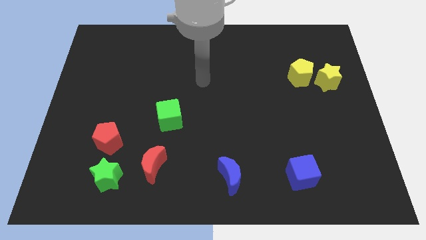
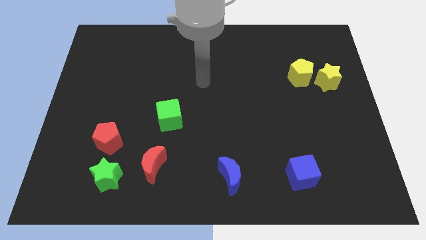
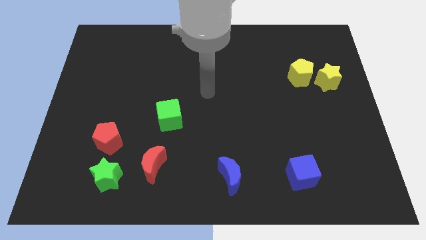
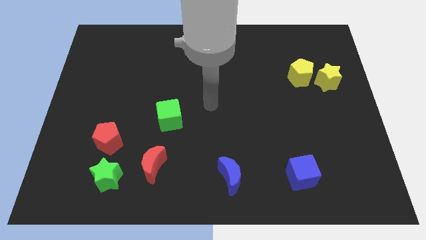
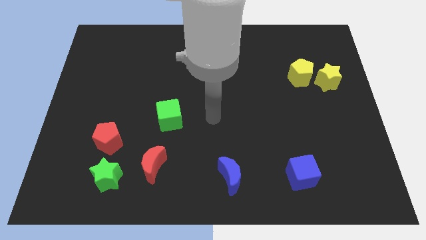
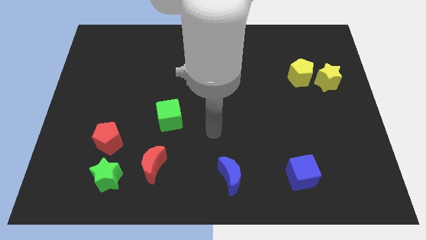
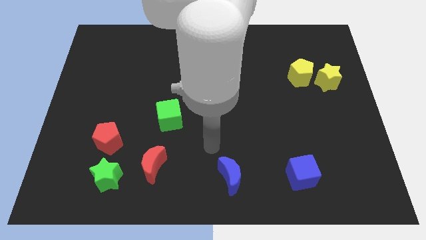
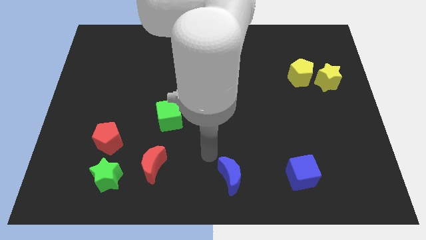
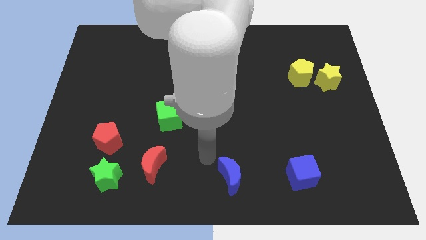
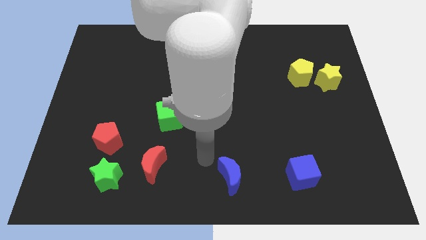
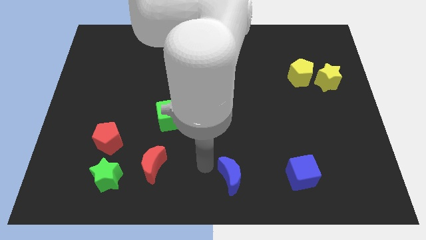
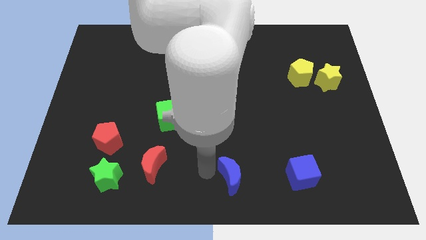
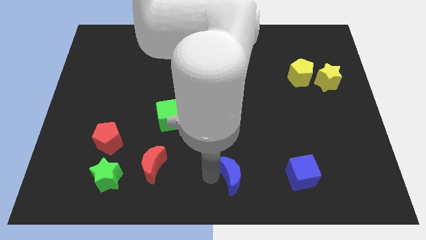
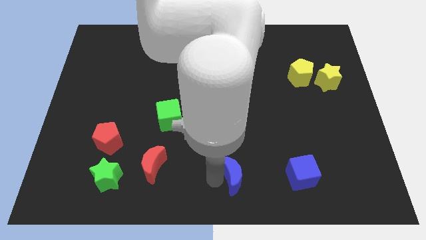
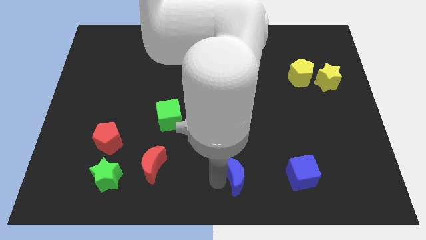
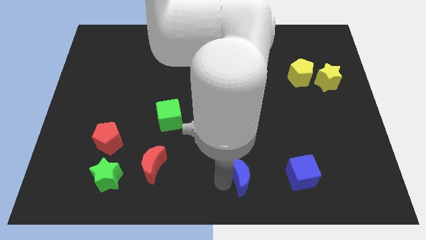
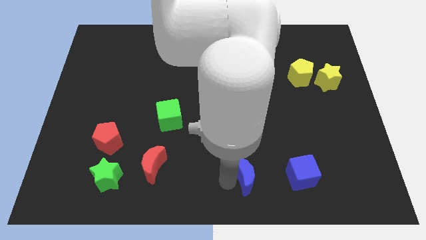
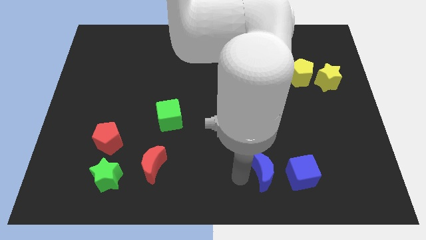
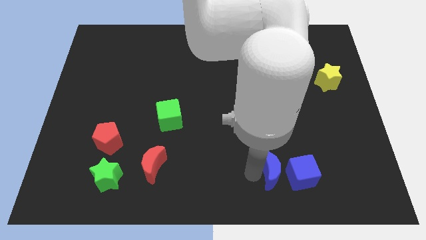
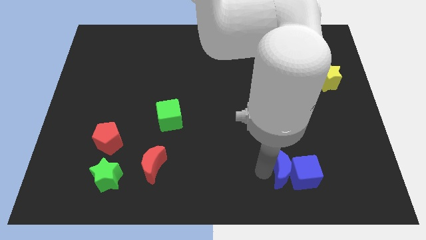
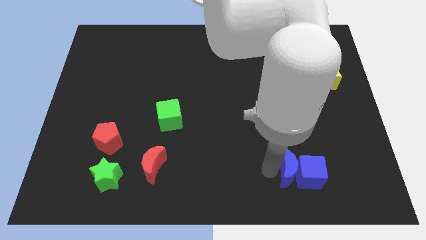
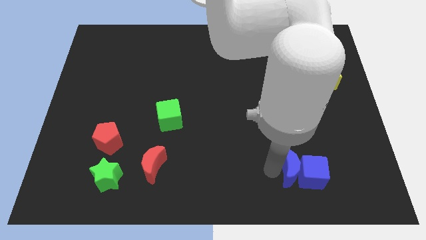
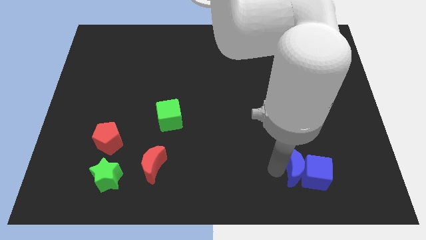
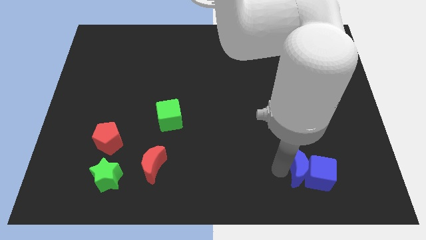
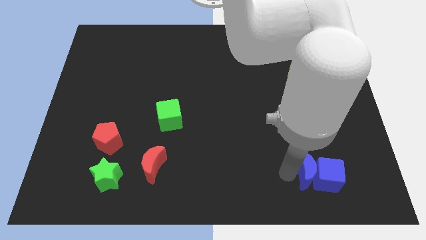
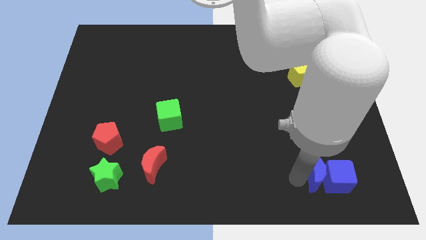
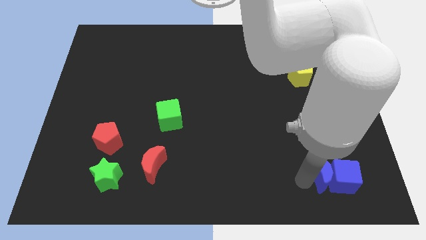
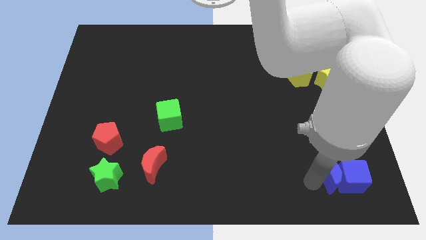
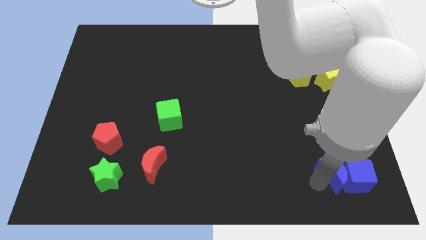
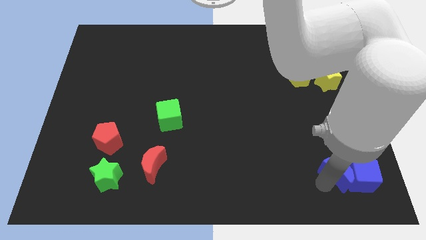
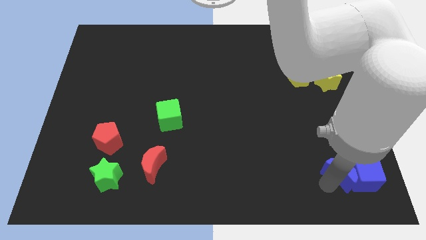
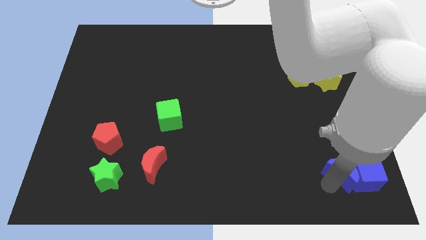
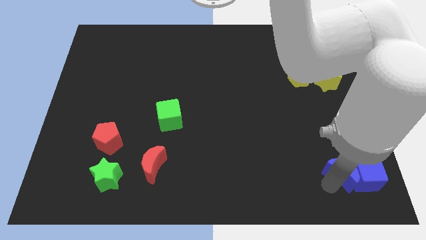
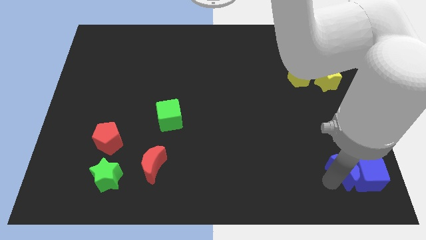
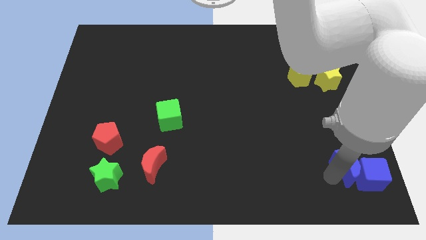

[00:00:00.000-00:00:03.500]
move blue crescent along with blue cube towards the bottom right corner of the board

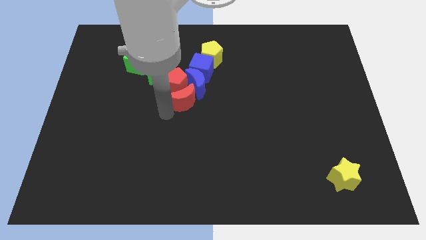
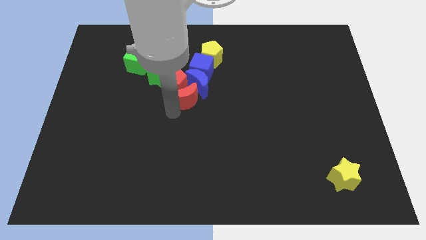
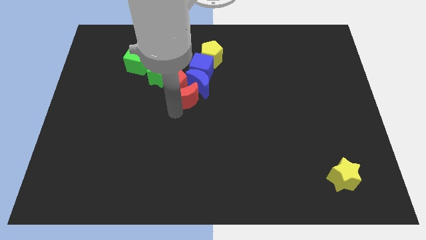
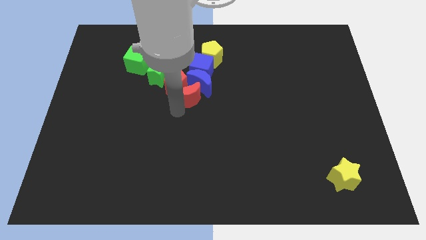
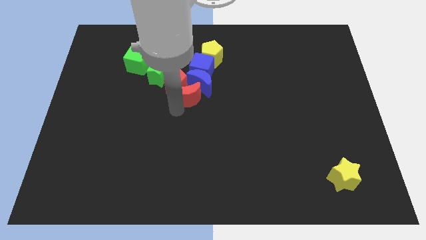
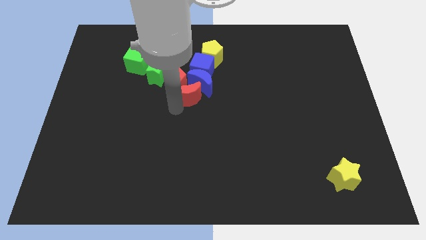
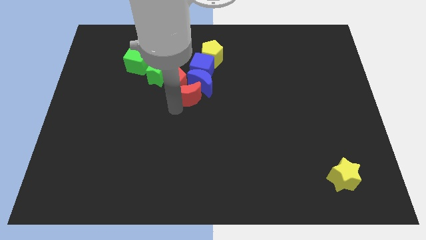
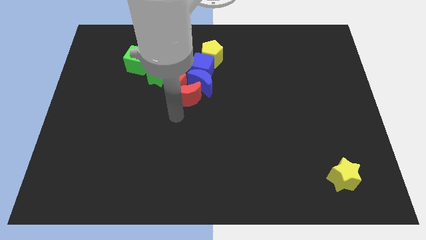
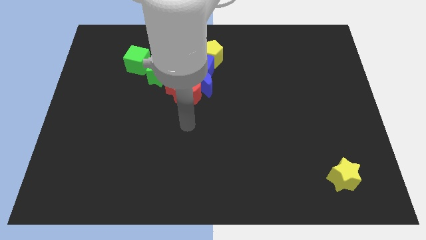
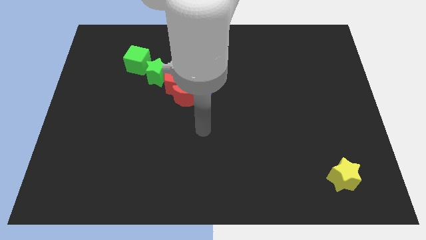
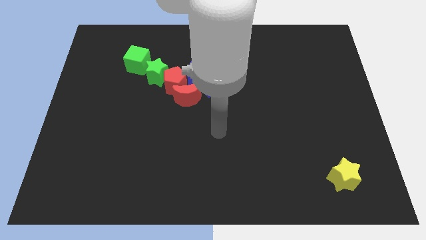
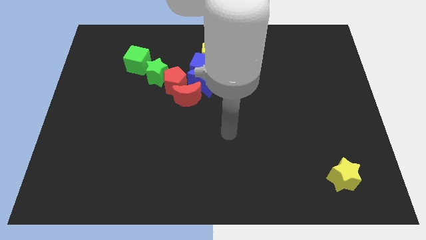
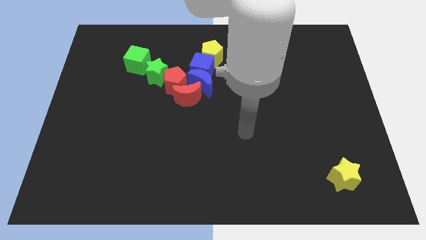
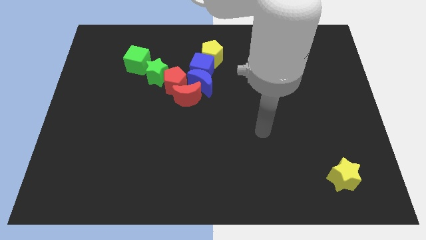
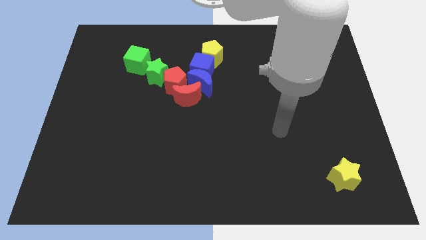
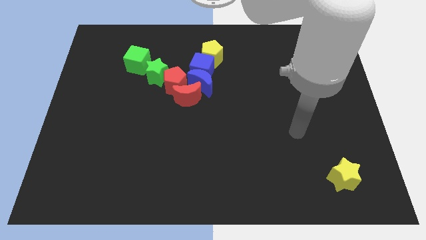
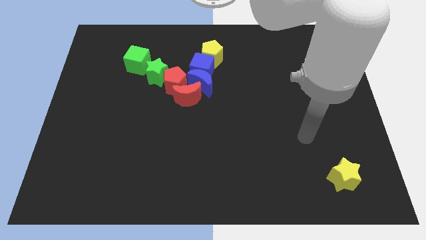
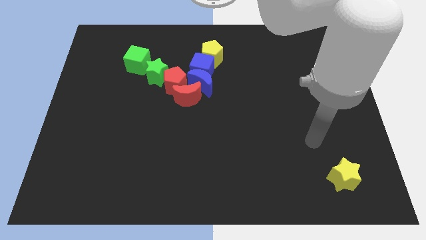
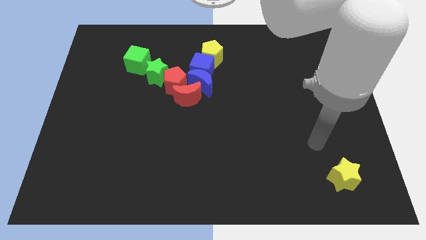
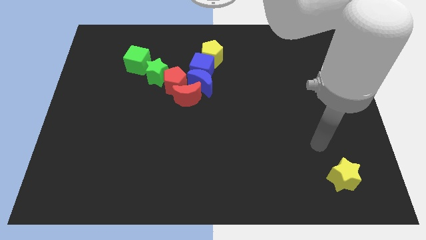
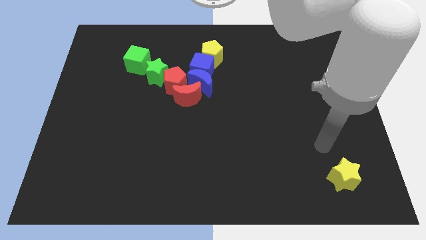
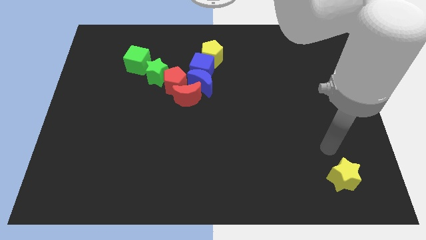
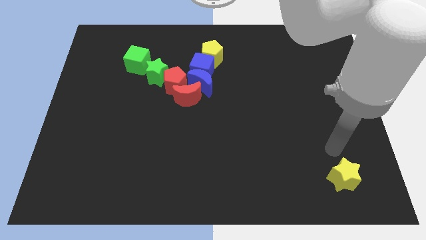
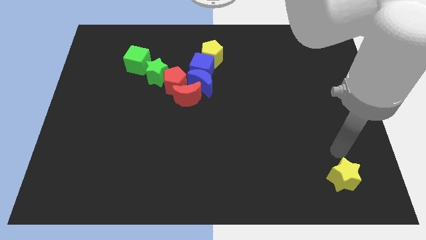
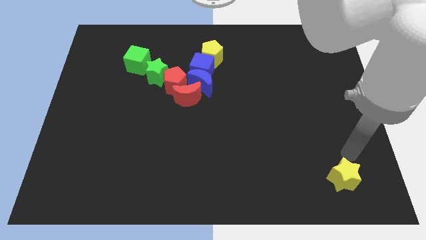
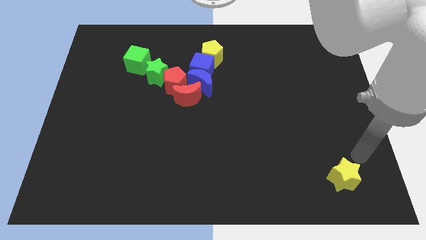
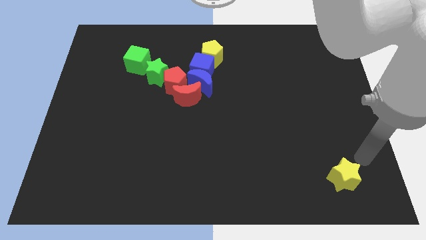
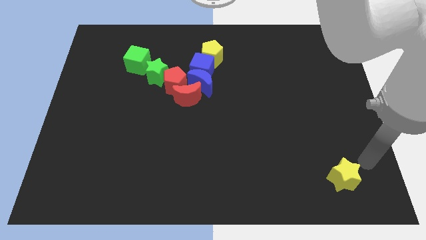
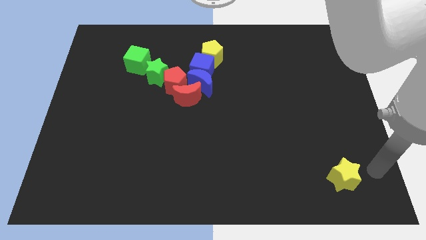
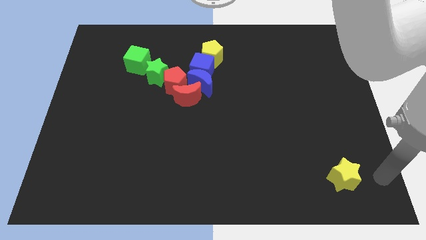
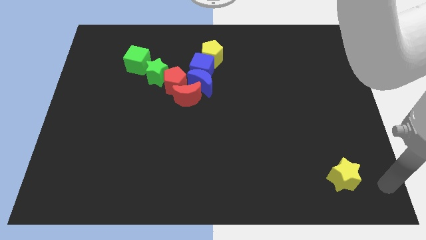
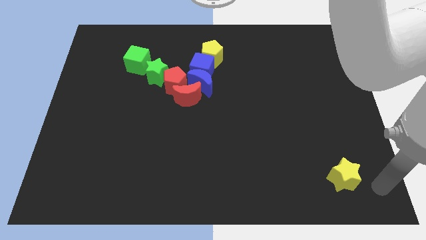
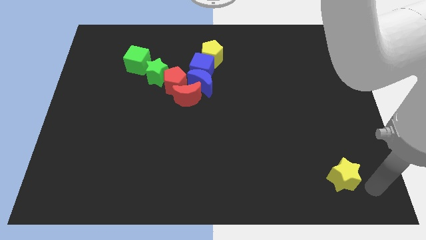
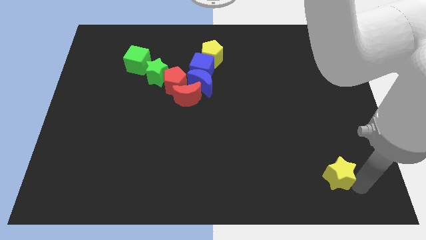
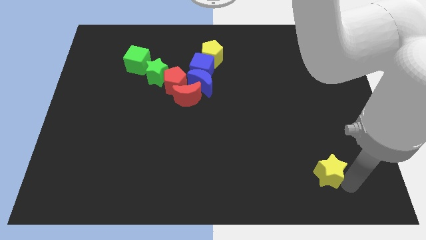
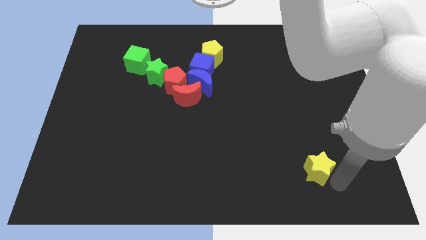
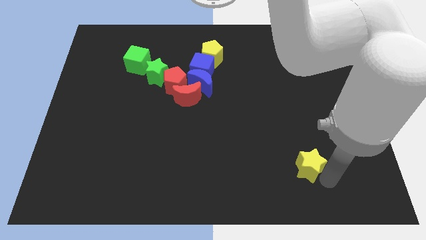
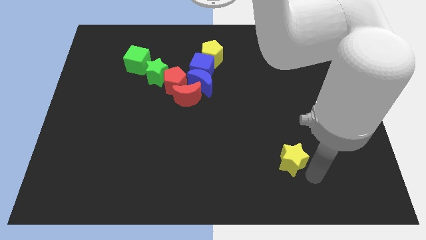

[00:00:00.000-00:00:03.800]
push yellow slightly star up

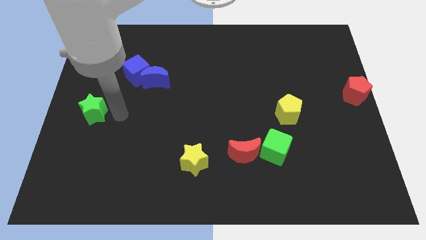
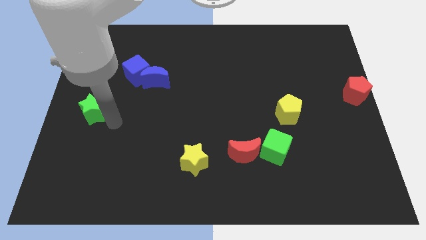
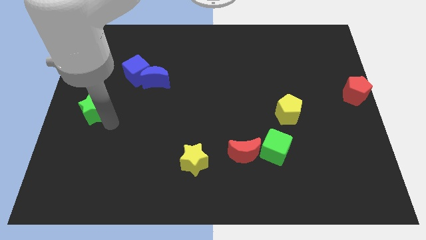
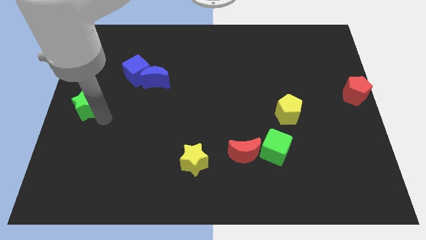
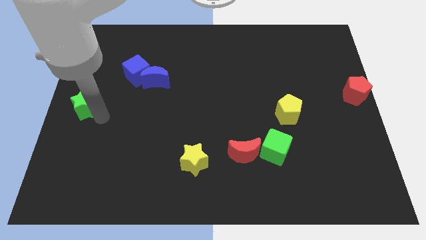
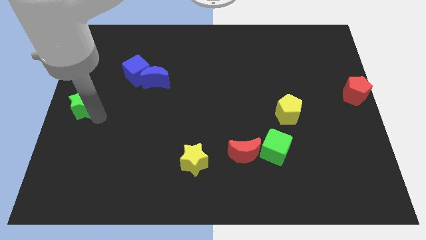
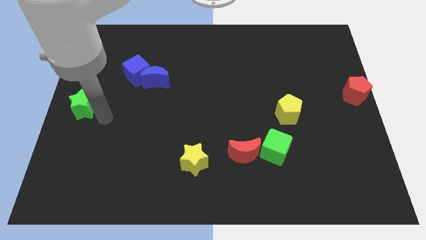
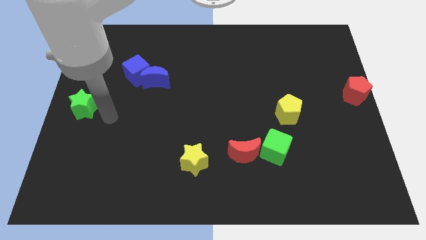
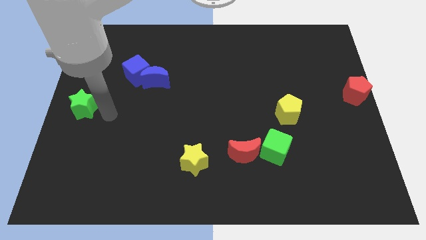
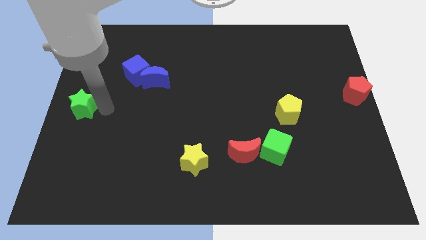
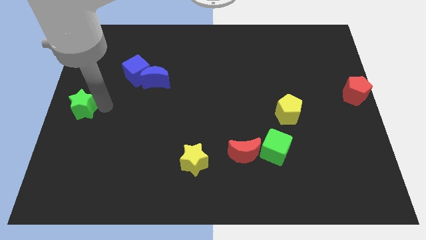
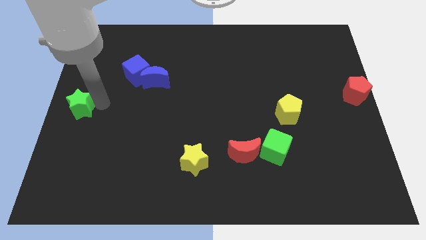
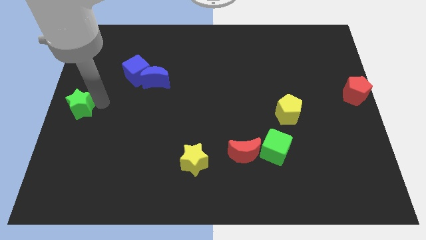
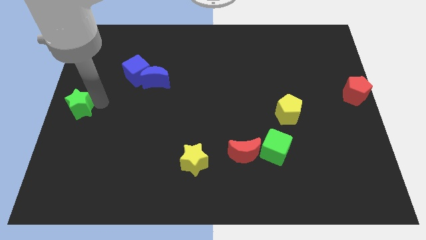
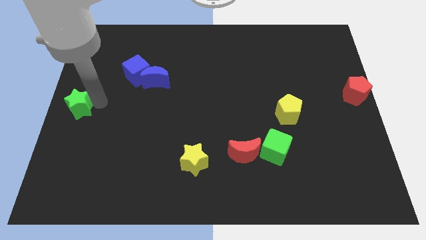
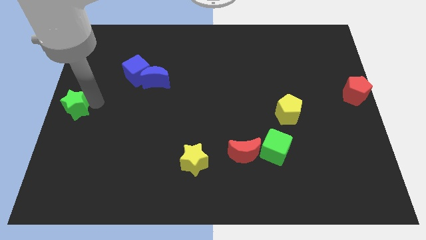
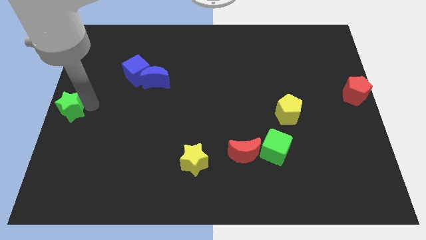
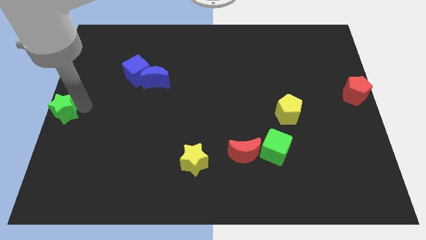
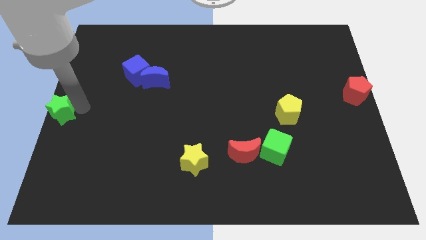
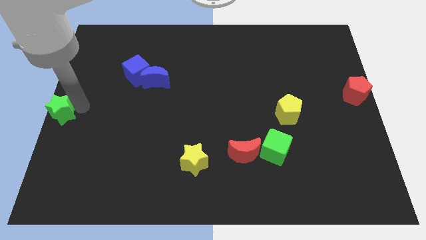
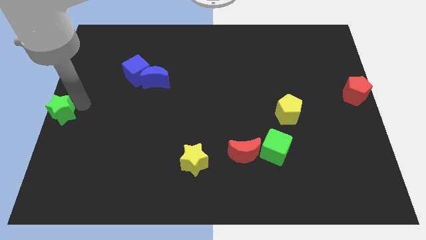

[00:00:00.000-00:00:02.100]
place the green star at the center left of the board
